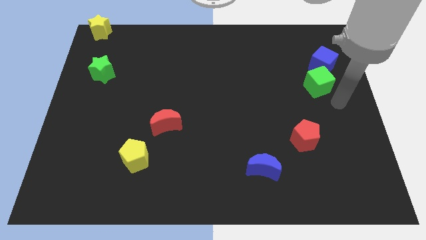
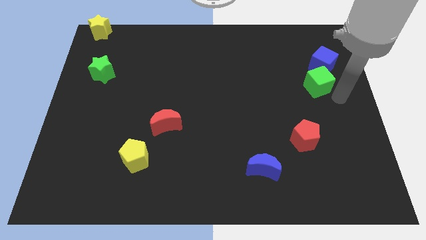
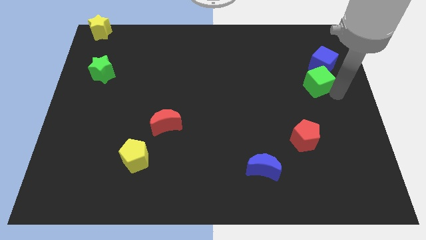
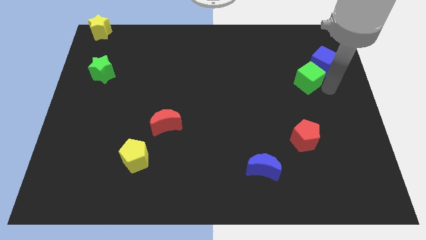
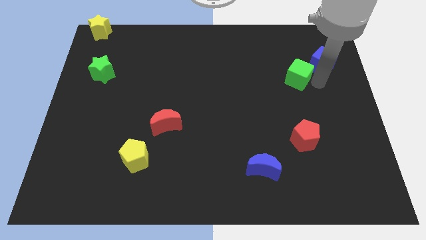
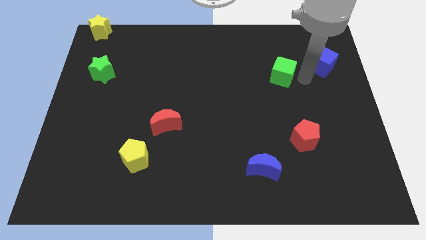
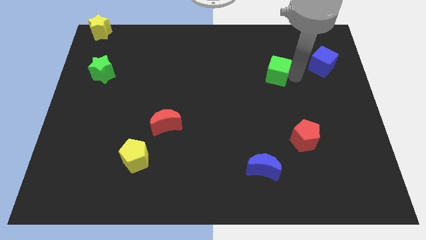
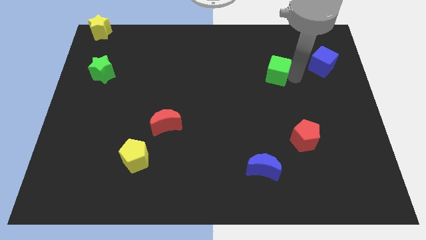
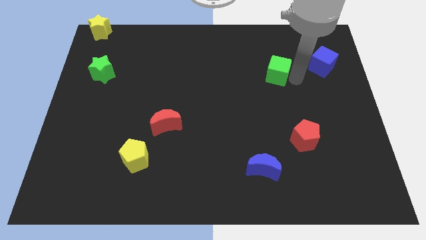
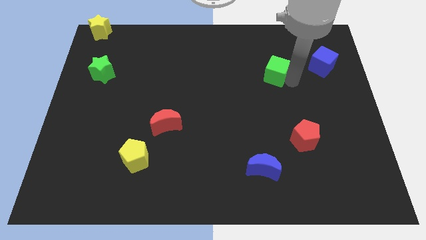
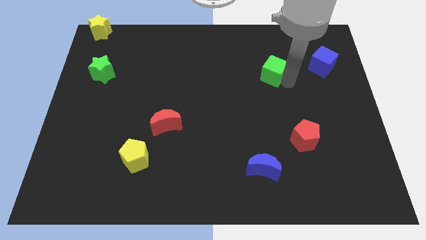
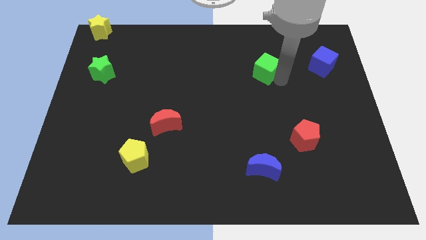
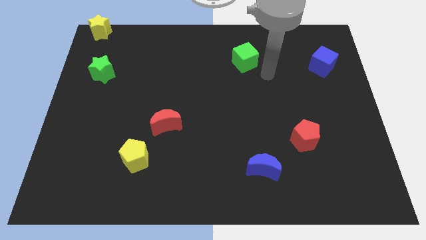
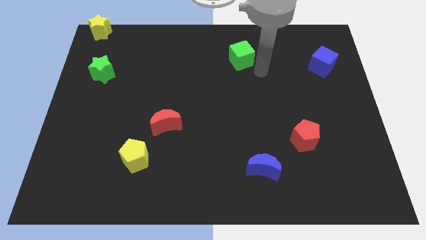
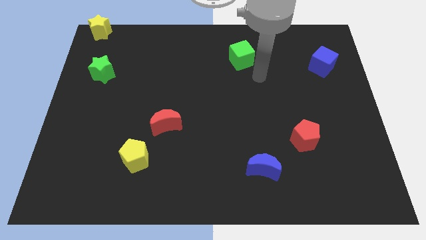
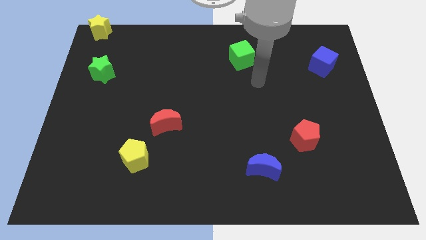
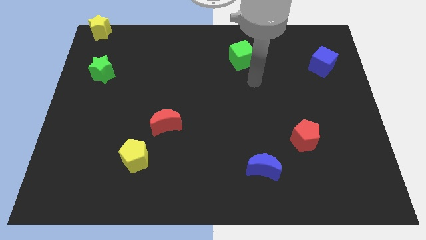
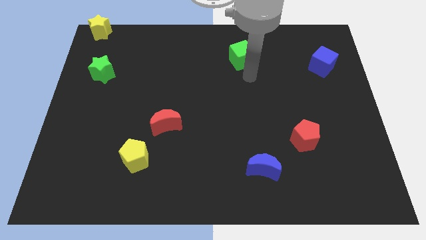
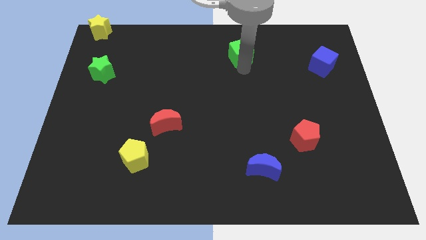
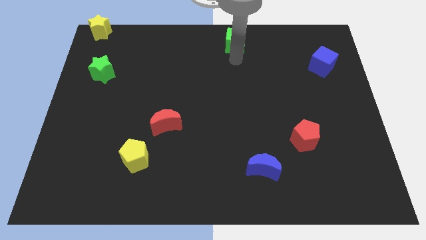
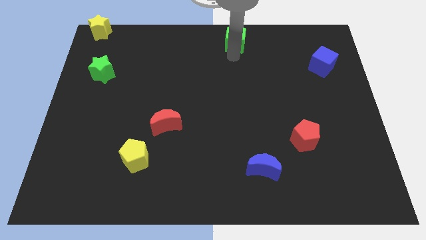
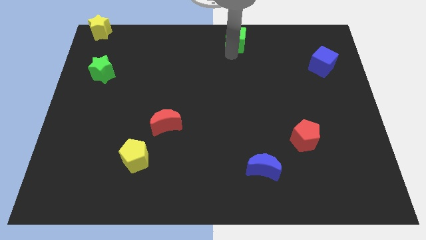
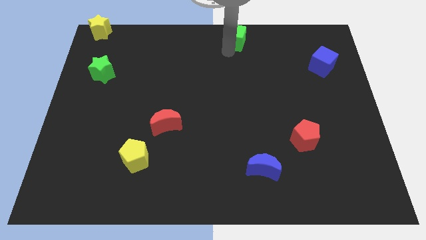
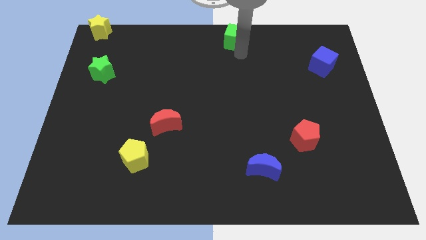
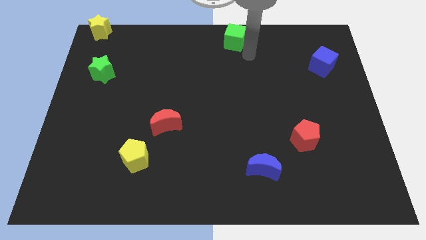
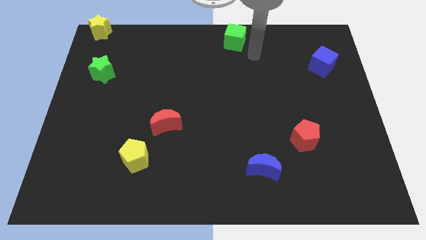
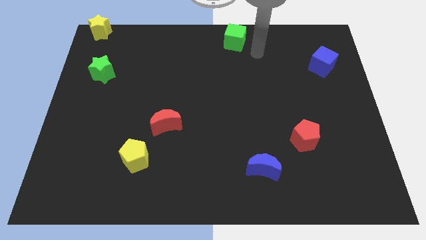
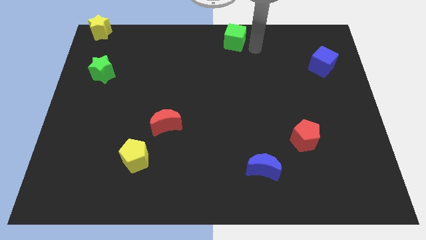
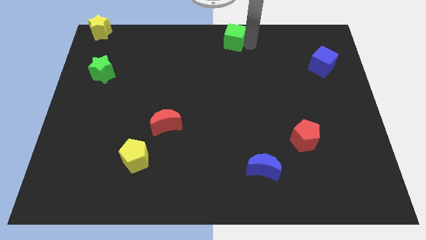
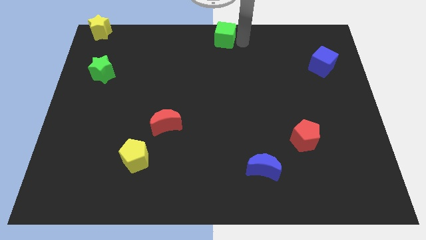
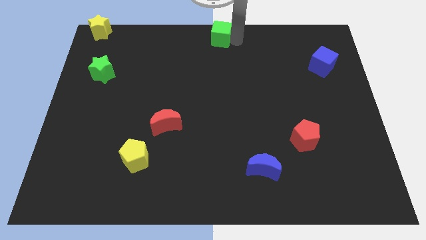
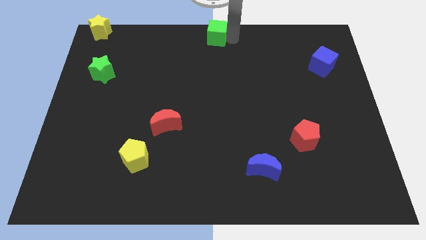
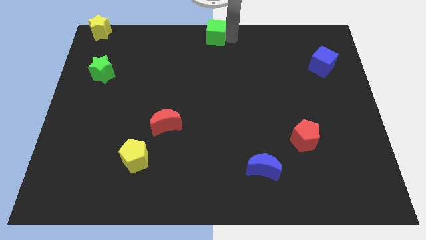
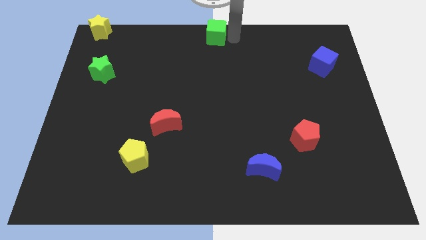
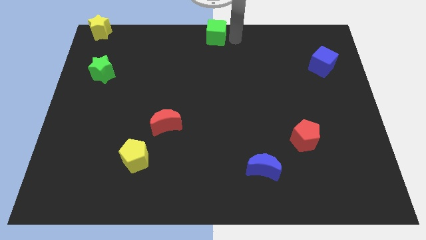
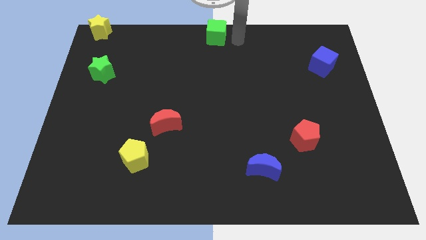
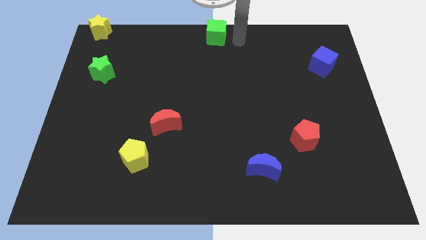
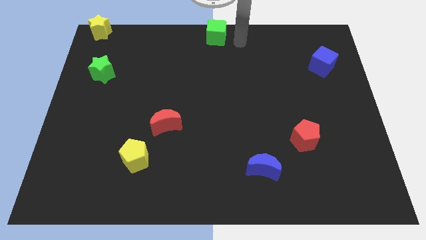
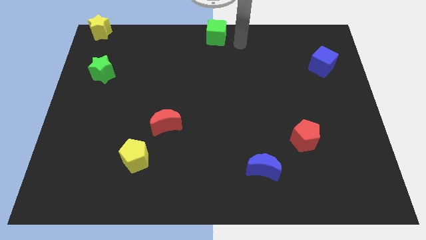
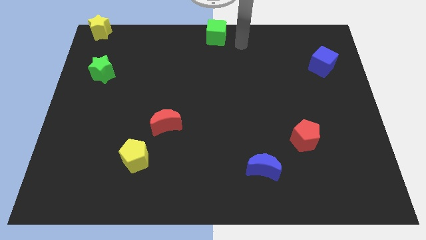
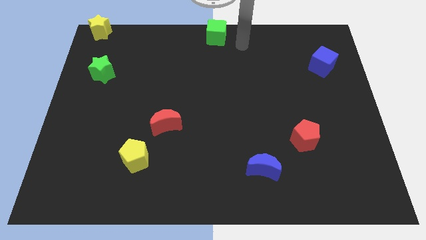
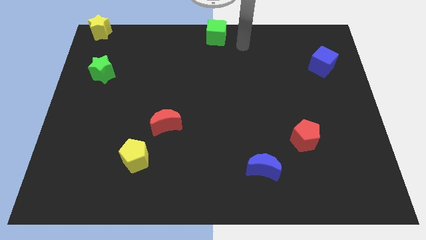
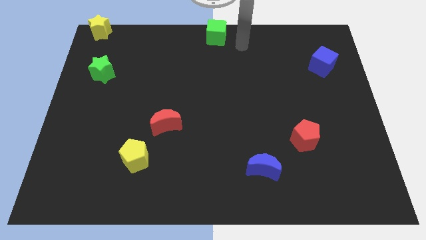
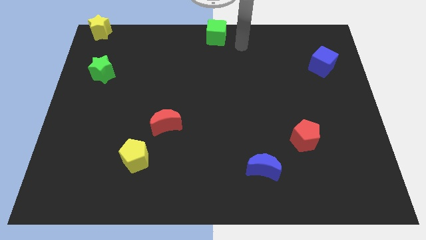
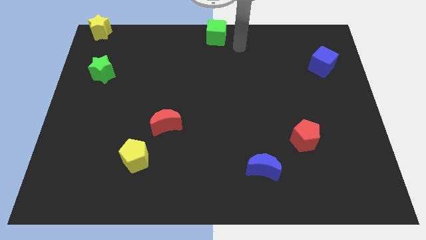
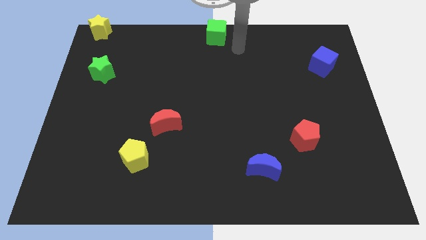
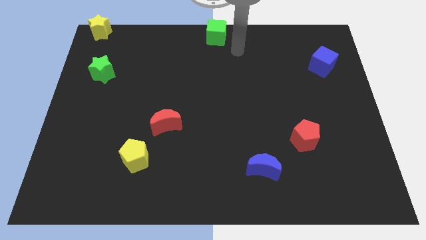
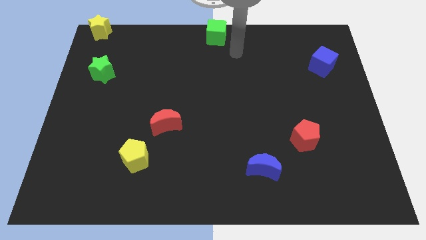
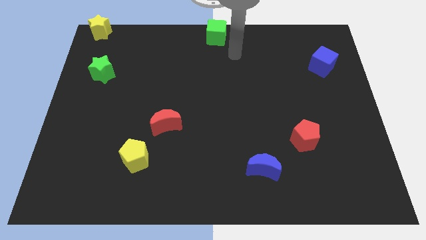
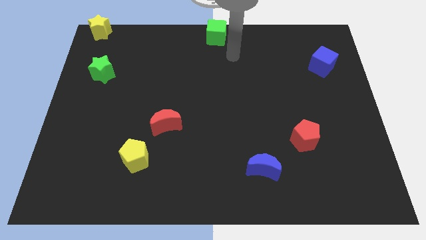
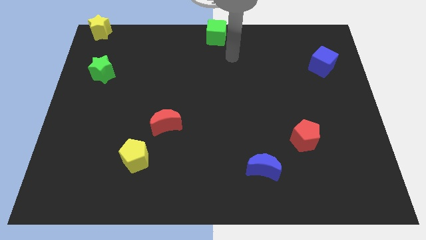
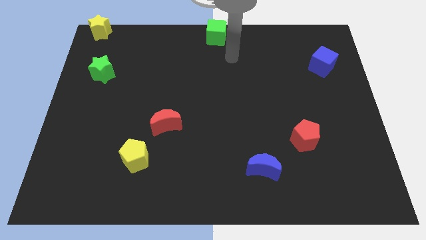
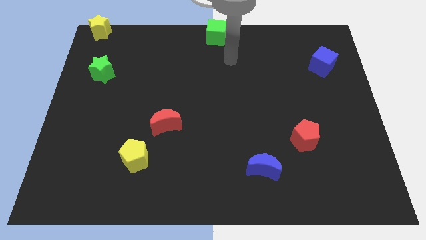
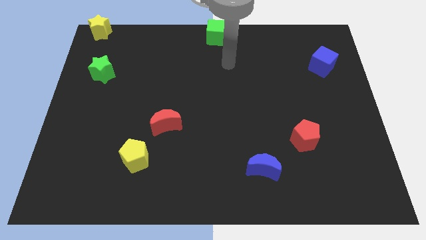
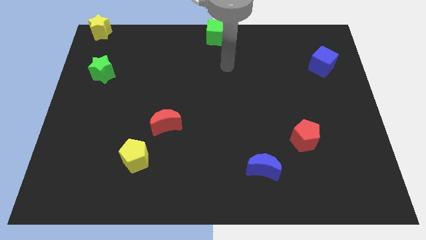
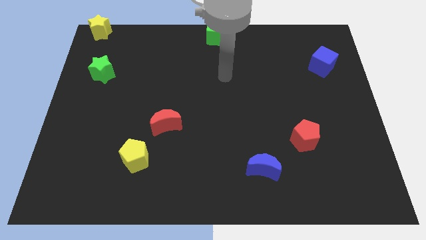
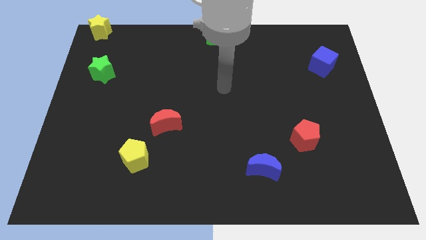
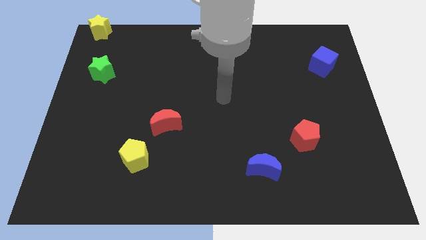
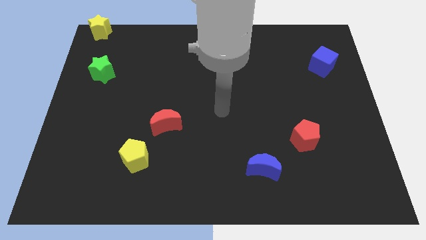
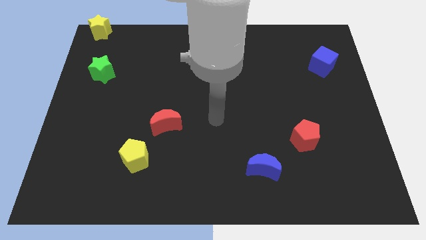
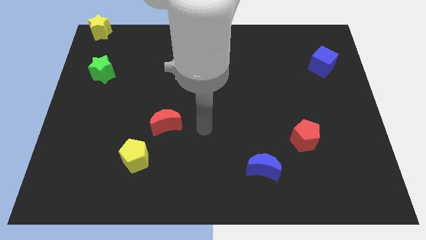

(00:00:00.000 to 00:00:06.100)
place the green cube at the top center of the board

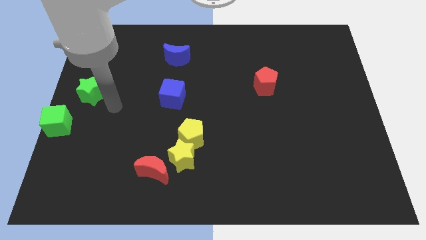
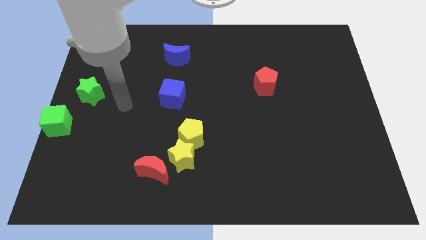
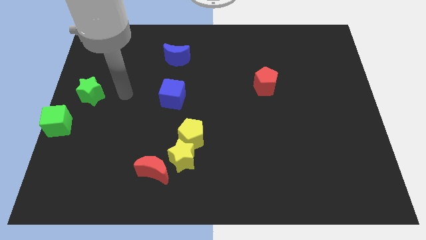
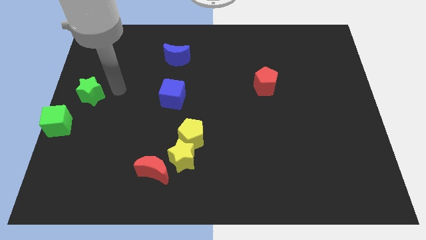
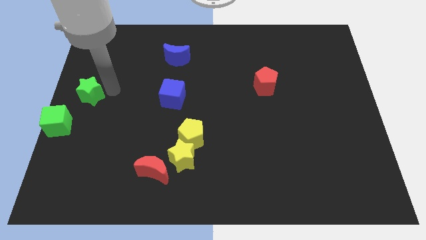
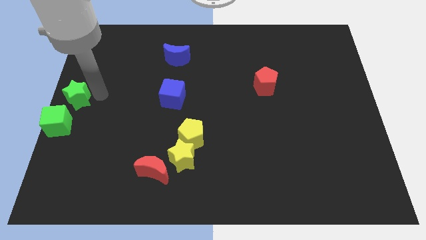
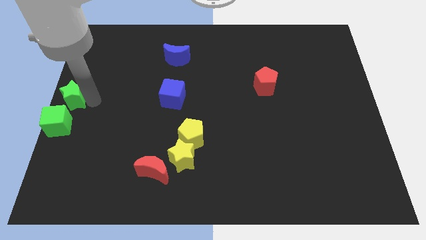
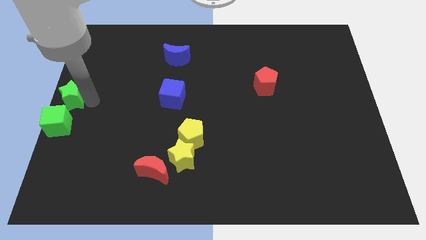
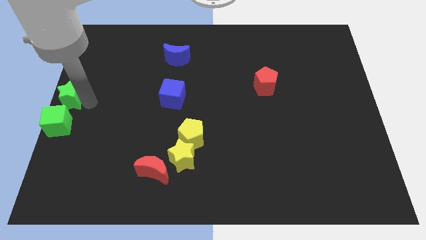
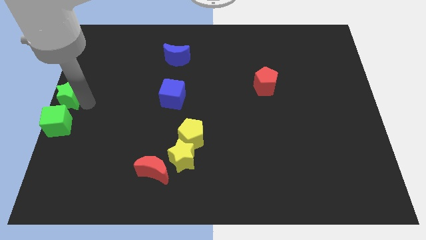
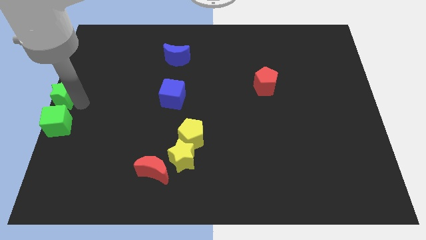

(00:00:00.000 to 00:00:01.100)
place the green star at the top side of the green cube

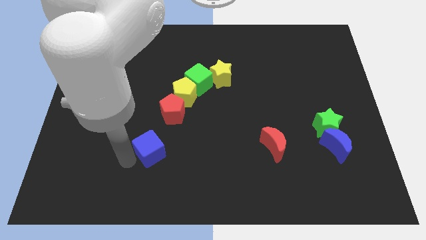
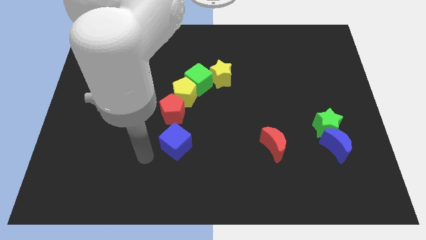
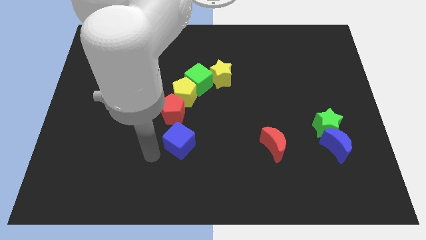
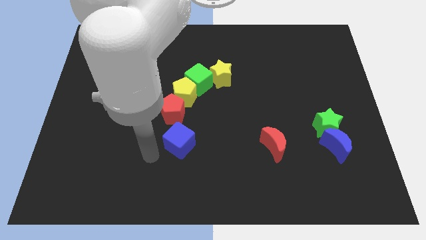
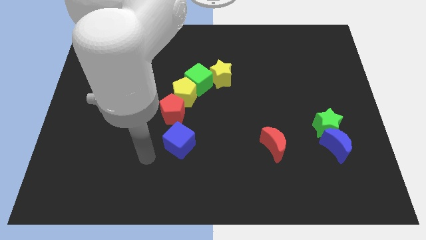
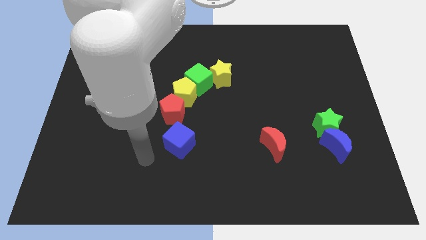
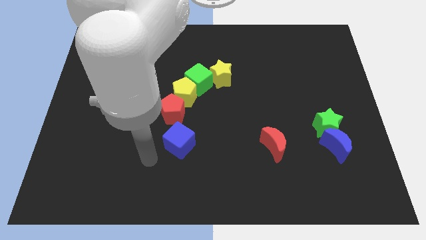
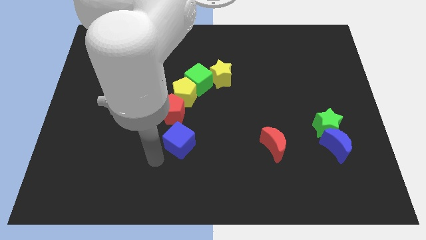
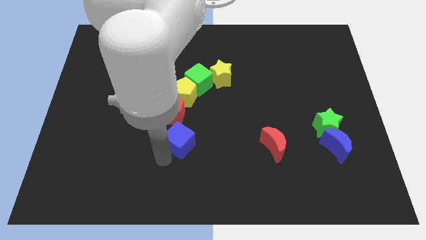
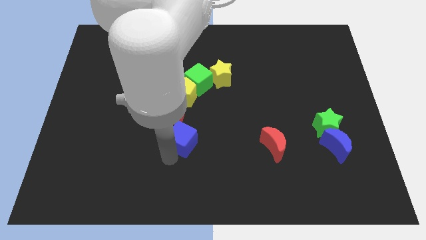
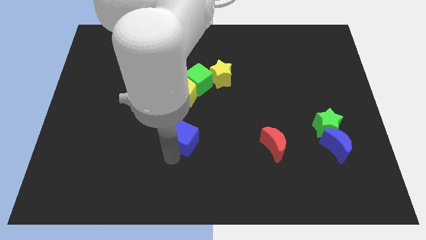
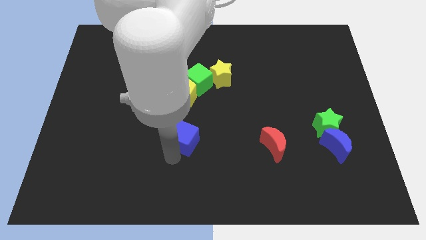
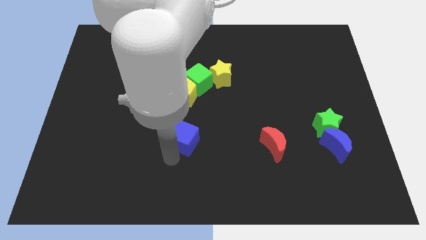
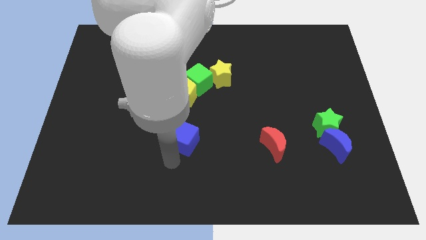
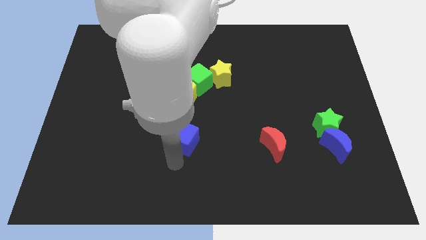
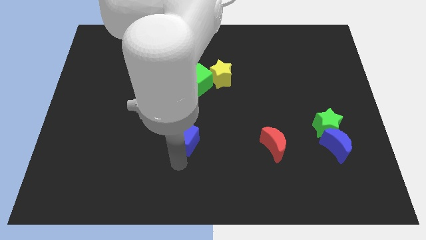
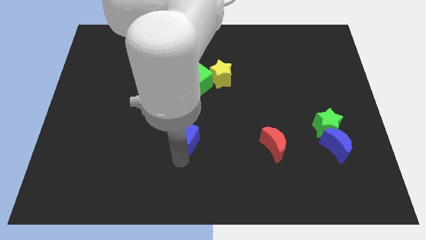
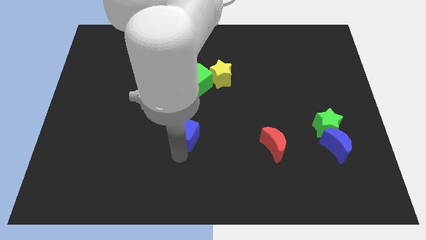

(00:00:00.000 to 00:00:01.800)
place the blue cube close to the red pentagon

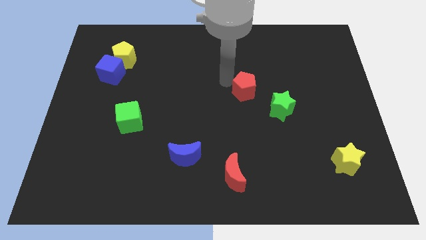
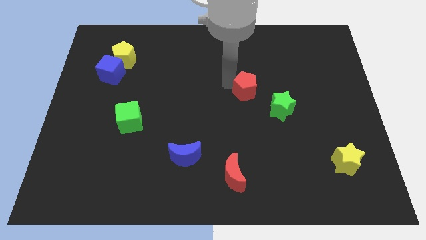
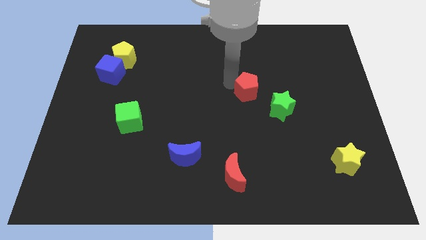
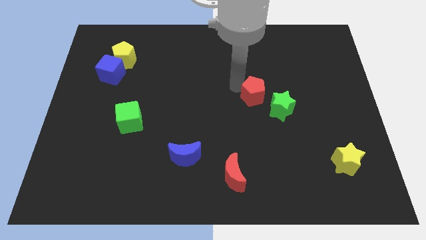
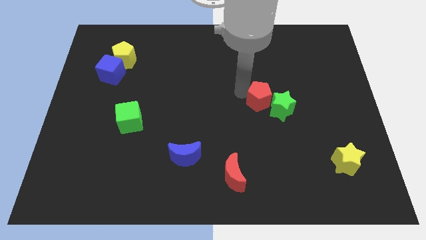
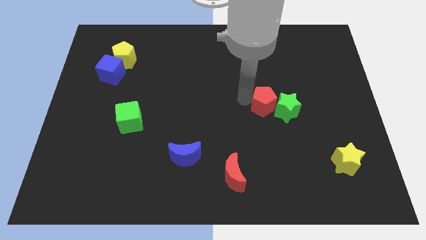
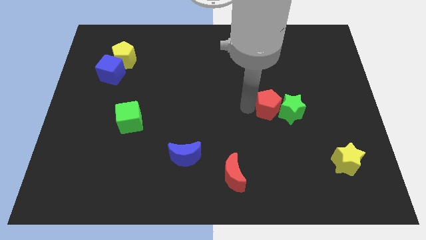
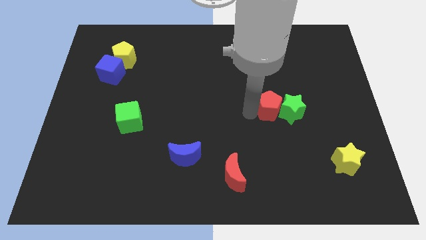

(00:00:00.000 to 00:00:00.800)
push red pentagon into green star
